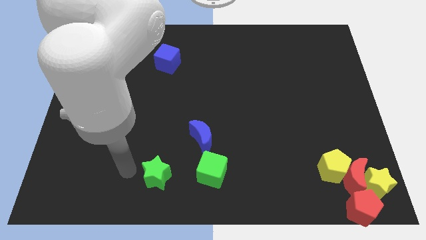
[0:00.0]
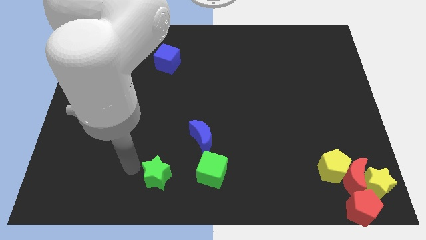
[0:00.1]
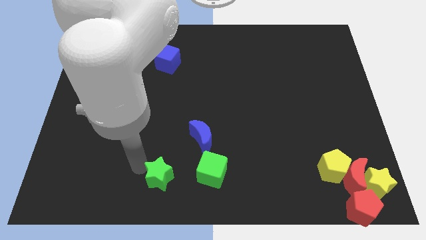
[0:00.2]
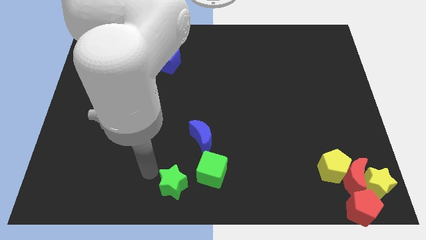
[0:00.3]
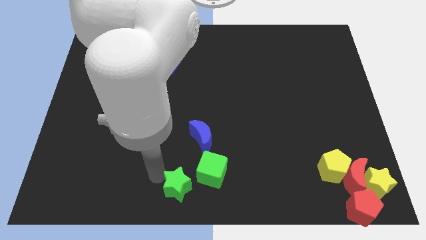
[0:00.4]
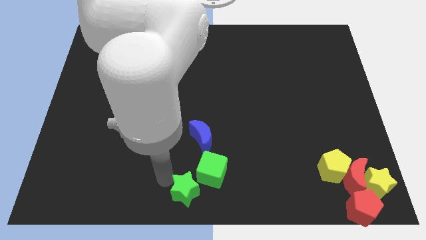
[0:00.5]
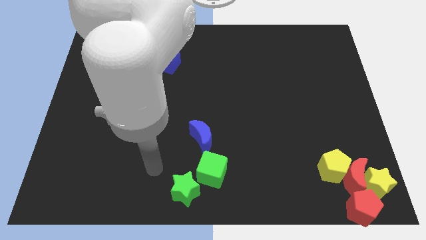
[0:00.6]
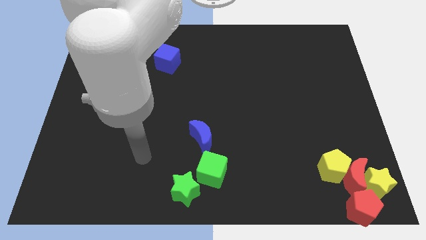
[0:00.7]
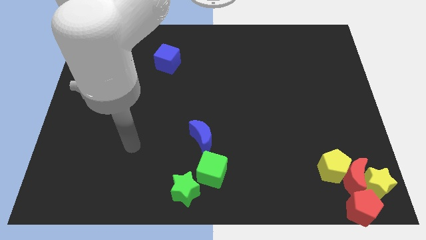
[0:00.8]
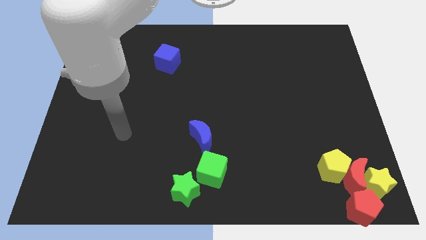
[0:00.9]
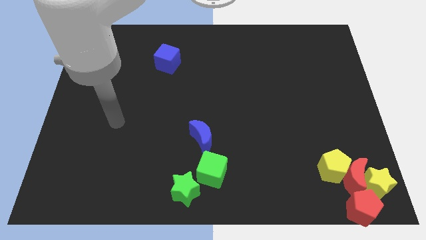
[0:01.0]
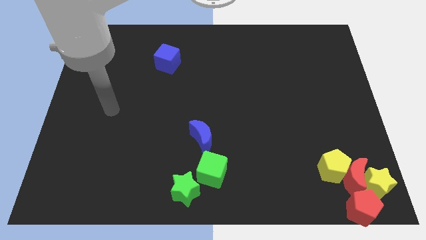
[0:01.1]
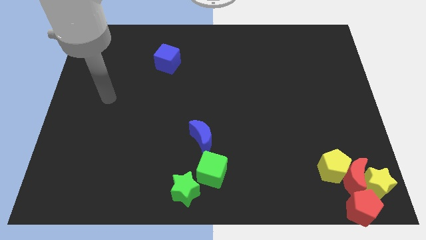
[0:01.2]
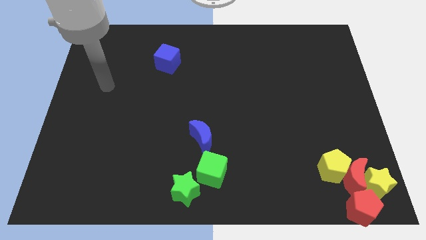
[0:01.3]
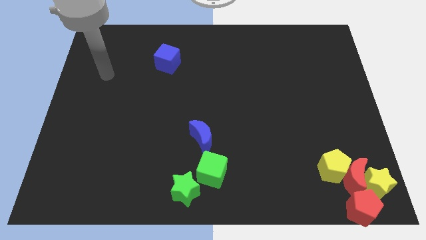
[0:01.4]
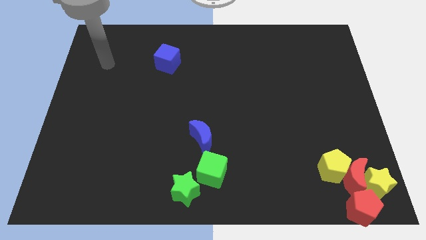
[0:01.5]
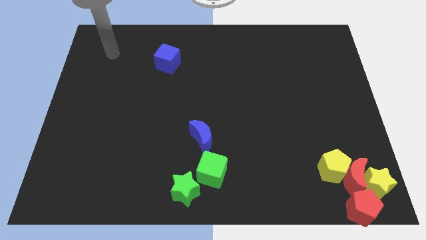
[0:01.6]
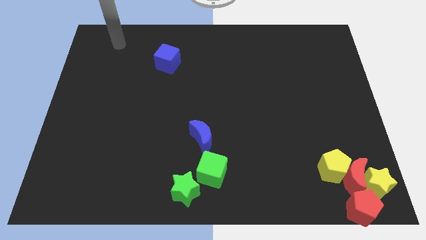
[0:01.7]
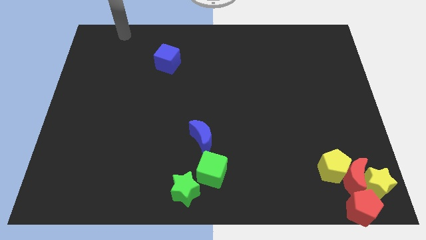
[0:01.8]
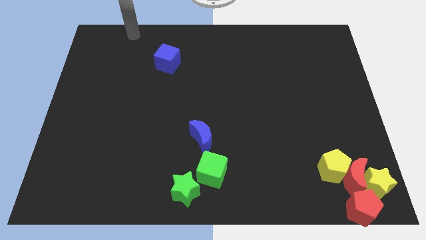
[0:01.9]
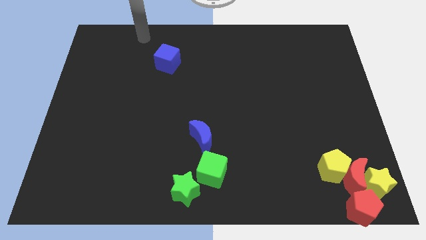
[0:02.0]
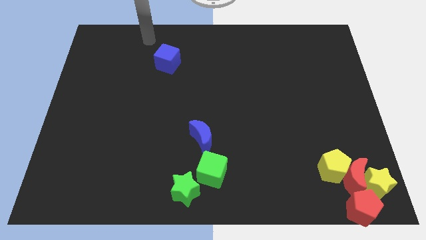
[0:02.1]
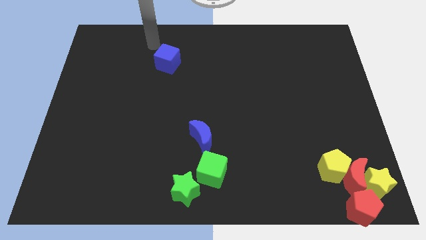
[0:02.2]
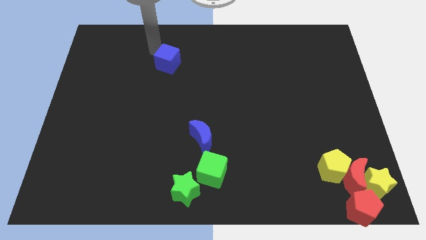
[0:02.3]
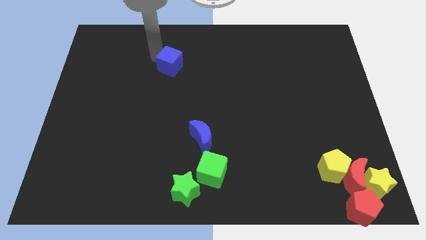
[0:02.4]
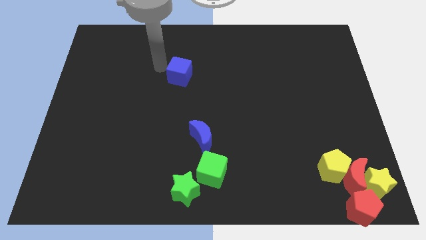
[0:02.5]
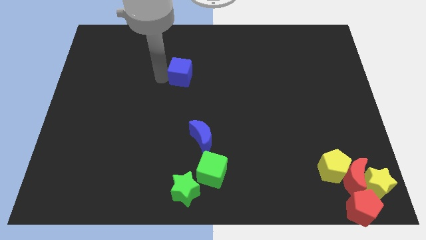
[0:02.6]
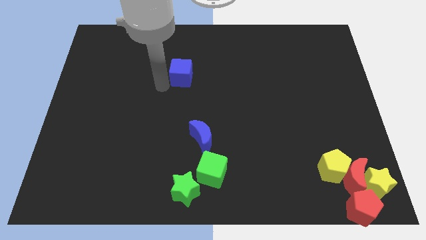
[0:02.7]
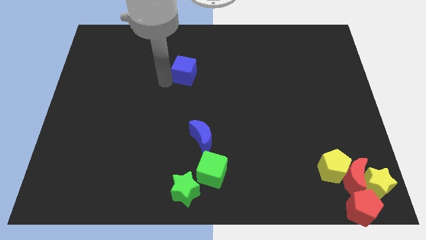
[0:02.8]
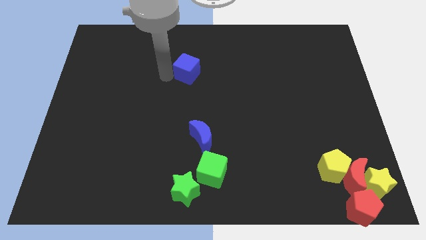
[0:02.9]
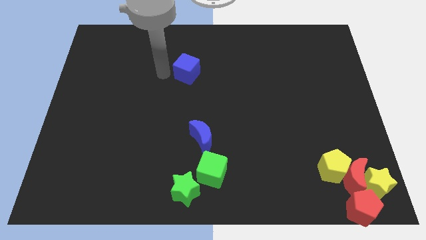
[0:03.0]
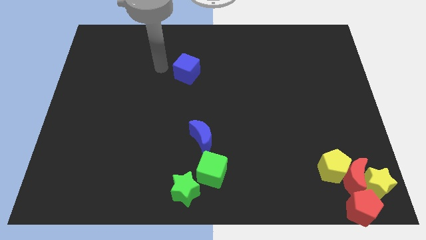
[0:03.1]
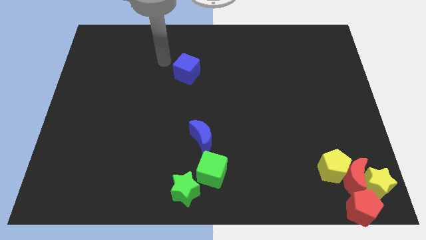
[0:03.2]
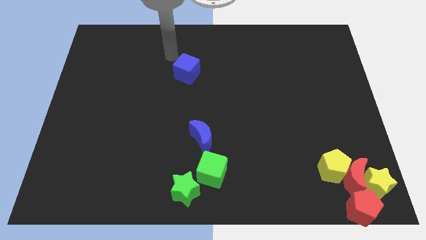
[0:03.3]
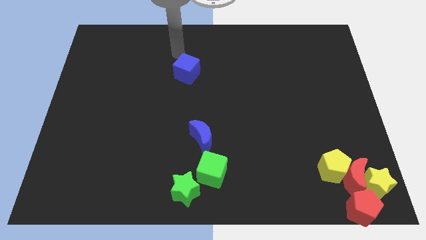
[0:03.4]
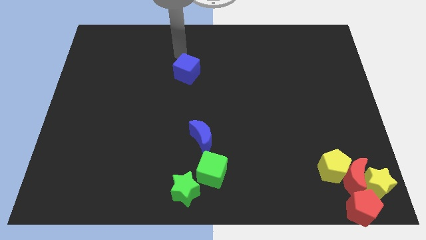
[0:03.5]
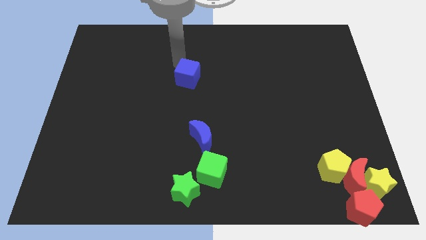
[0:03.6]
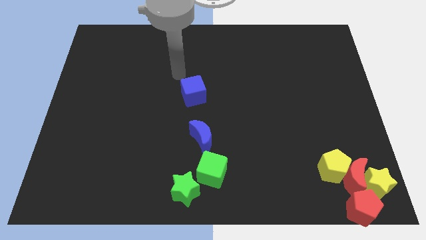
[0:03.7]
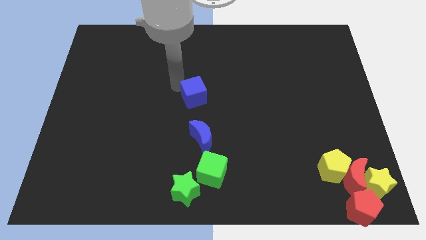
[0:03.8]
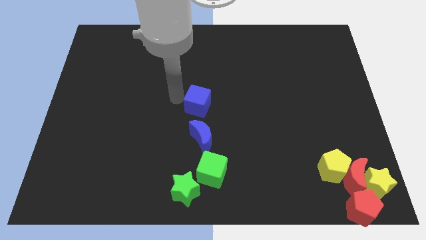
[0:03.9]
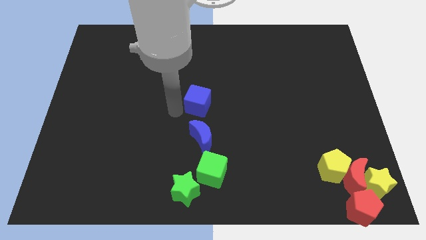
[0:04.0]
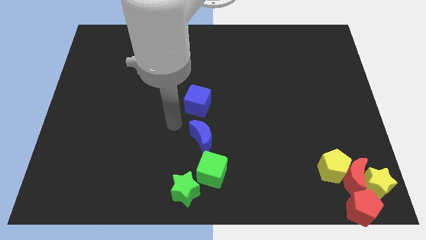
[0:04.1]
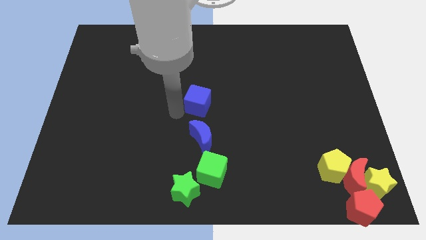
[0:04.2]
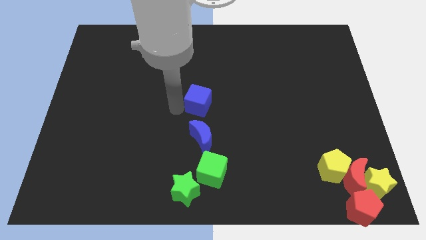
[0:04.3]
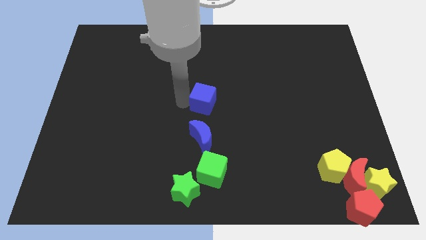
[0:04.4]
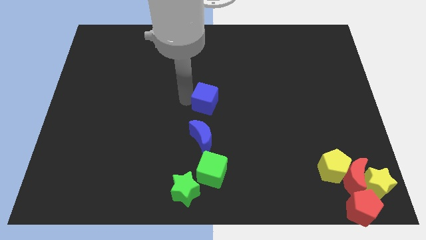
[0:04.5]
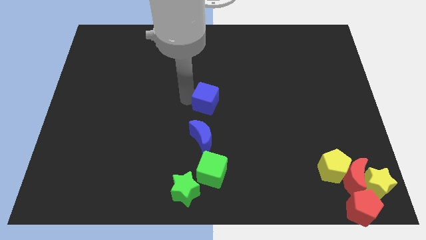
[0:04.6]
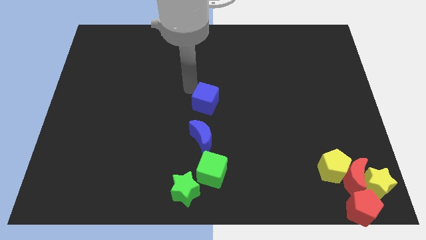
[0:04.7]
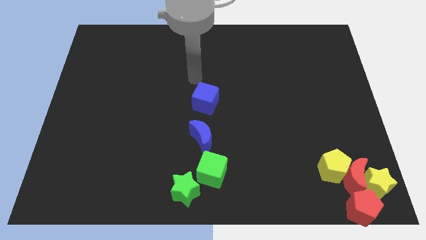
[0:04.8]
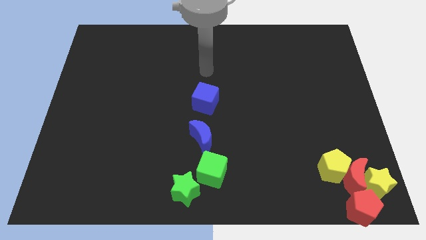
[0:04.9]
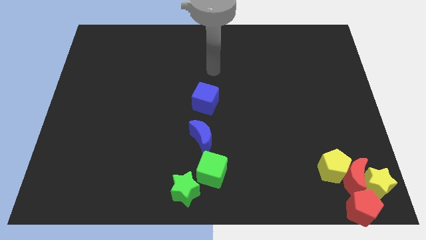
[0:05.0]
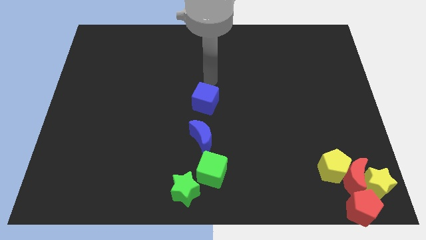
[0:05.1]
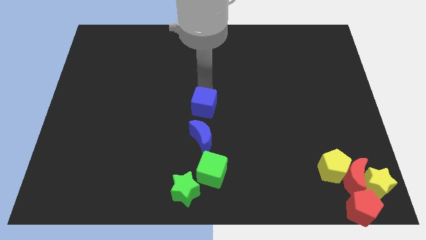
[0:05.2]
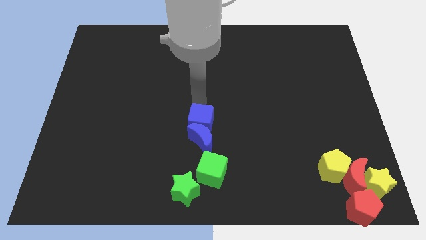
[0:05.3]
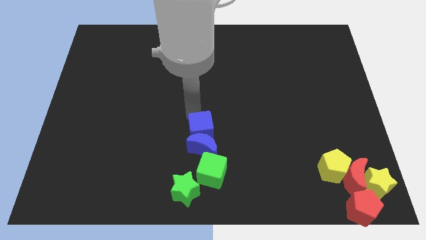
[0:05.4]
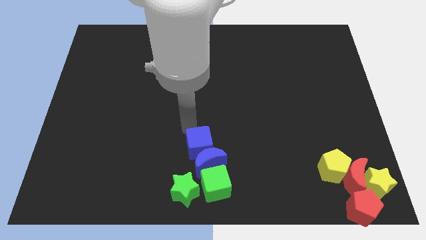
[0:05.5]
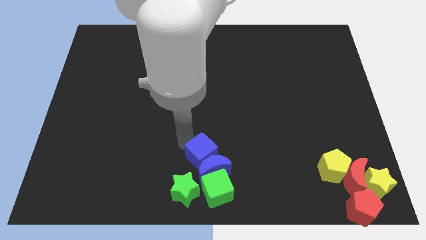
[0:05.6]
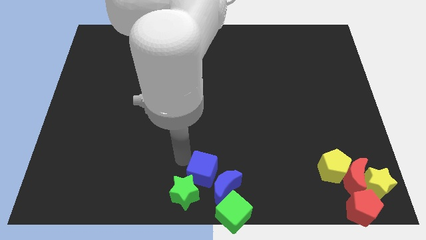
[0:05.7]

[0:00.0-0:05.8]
push the green star and blue cube into the group of blocks

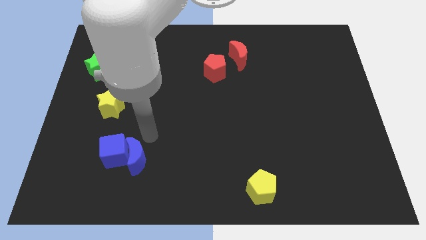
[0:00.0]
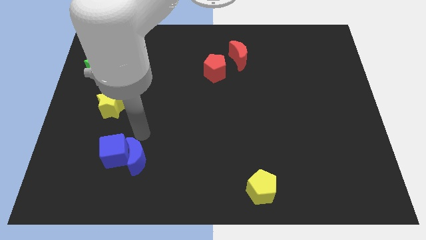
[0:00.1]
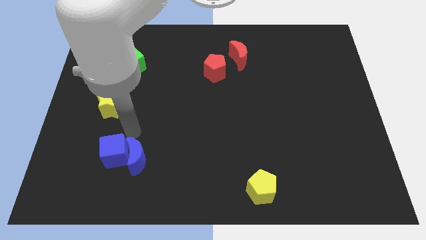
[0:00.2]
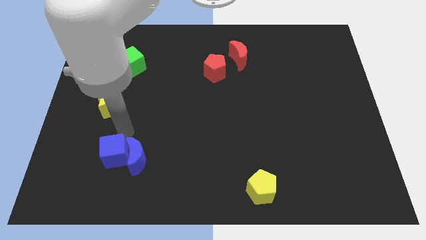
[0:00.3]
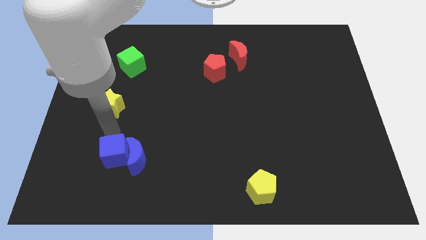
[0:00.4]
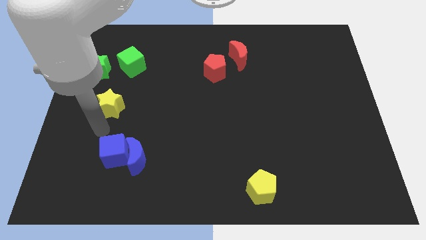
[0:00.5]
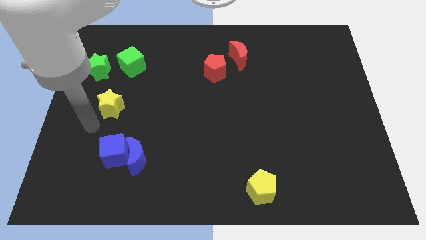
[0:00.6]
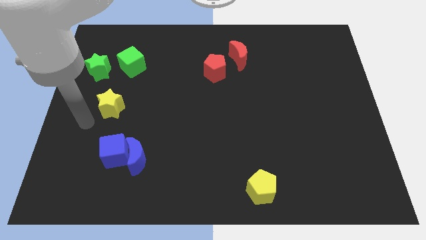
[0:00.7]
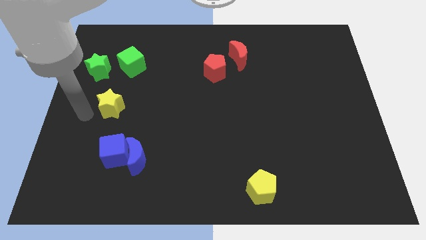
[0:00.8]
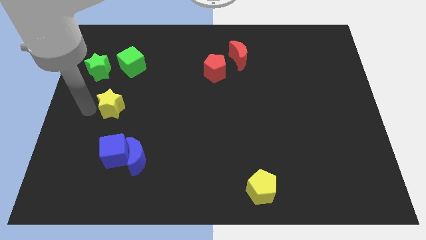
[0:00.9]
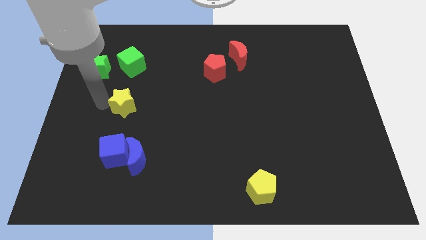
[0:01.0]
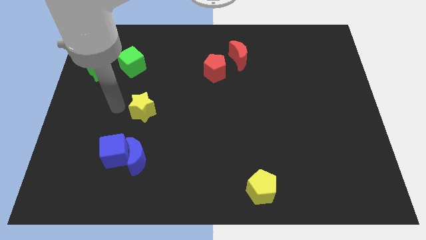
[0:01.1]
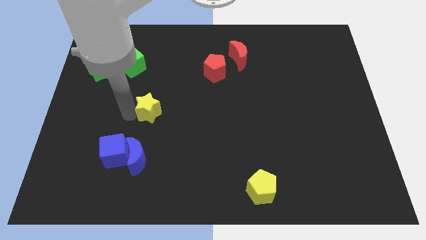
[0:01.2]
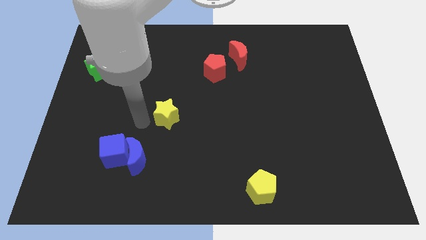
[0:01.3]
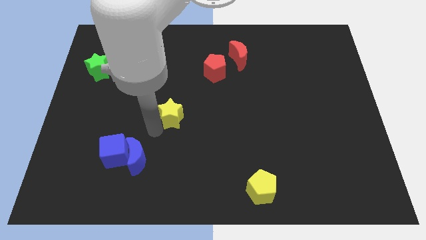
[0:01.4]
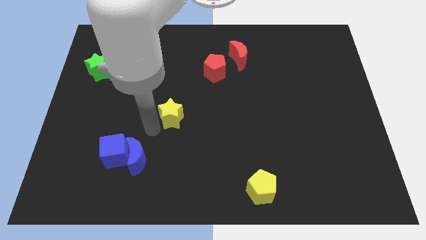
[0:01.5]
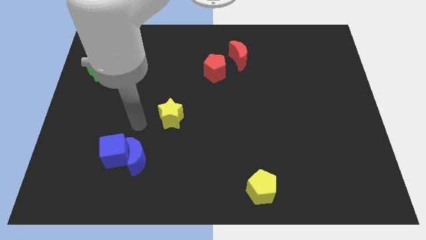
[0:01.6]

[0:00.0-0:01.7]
push the yellow star towards center of the board

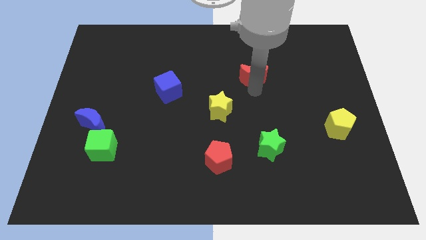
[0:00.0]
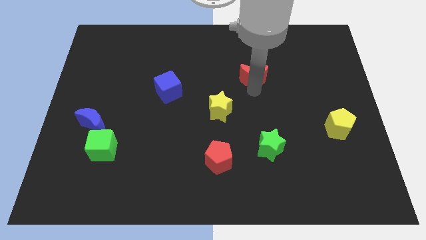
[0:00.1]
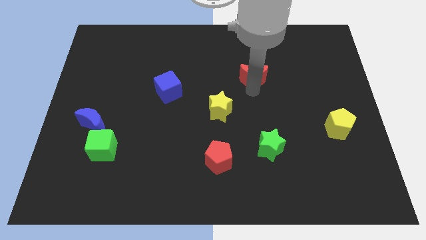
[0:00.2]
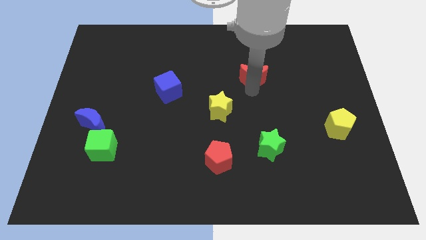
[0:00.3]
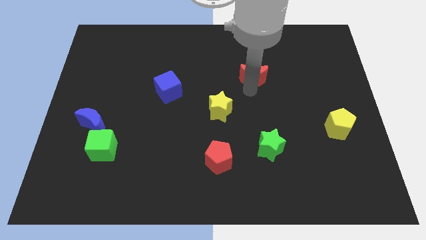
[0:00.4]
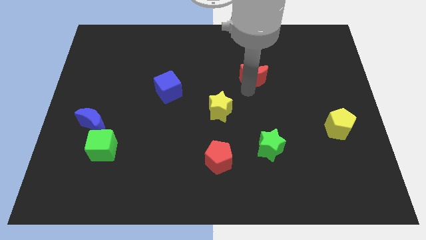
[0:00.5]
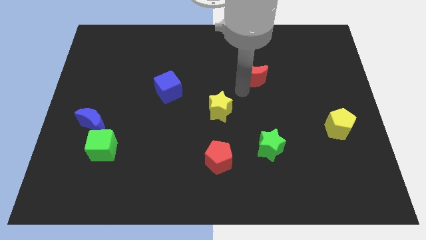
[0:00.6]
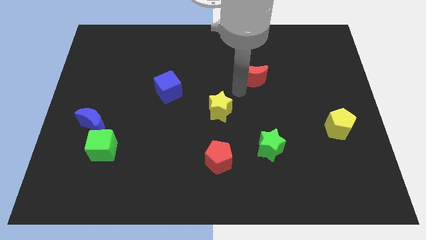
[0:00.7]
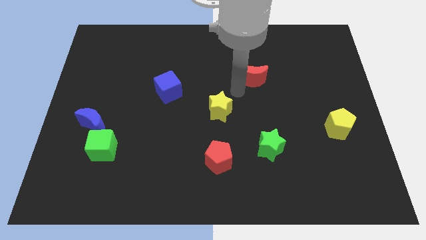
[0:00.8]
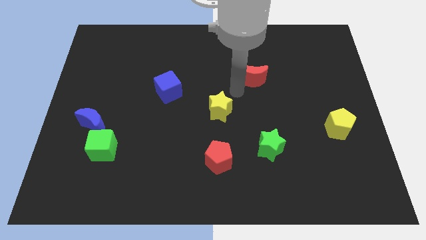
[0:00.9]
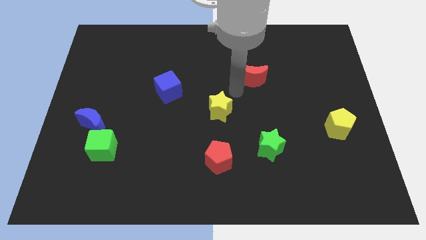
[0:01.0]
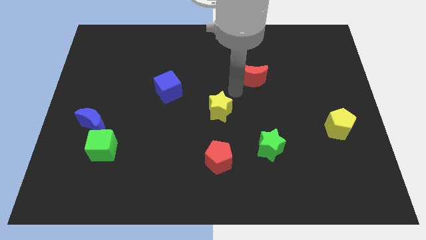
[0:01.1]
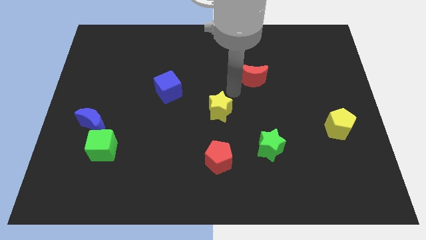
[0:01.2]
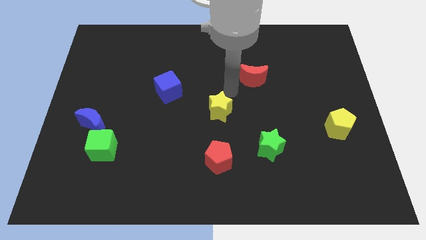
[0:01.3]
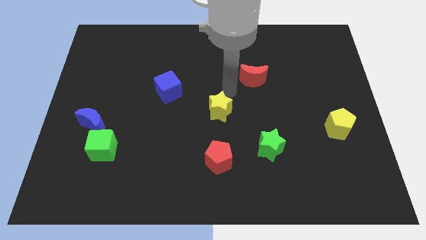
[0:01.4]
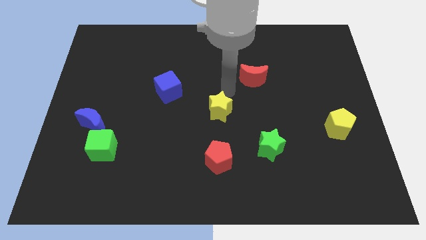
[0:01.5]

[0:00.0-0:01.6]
move the arm towards the top of the yellow star
